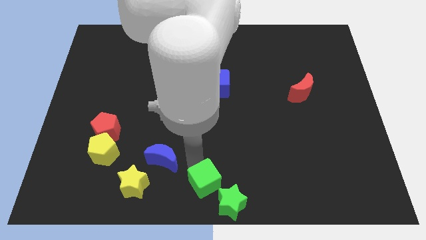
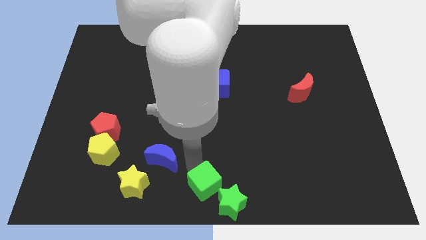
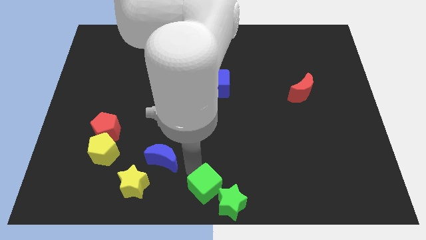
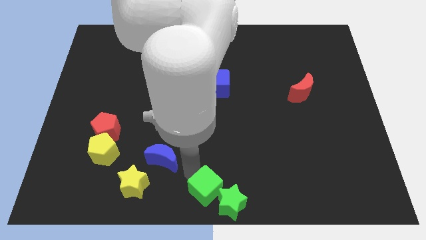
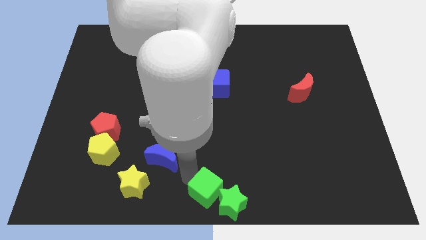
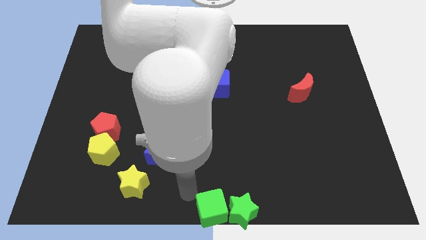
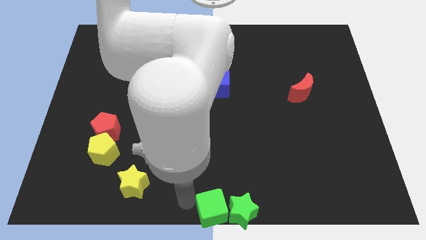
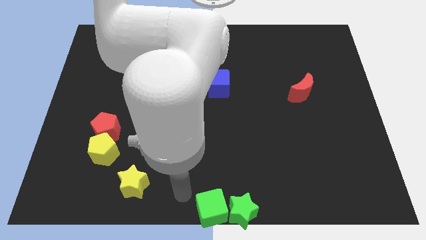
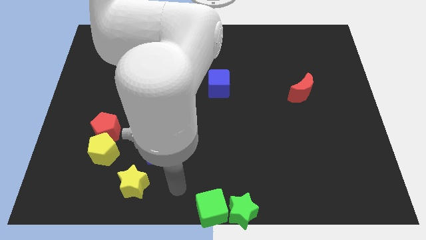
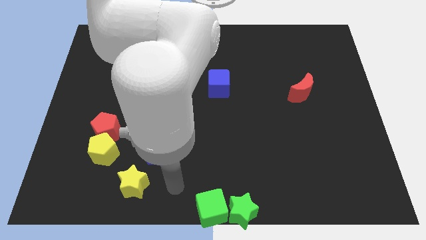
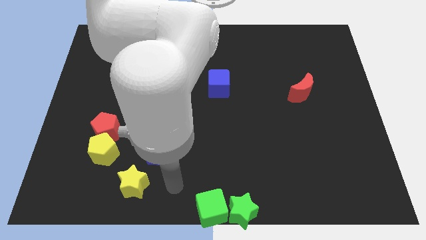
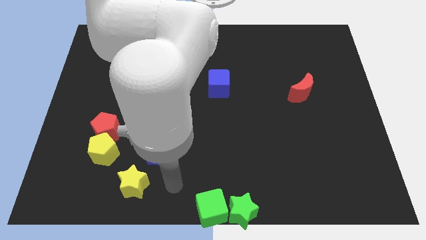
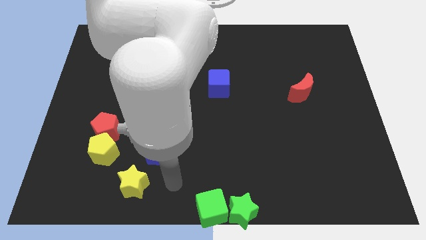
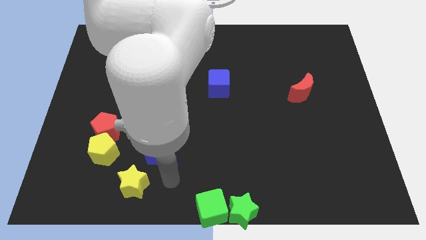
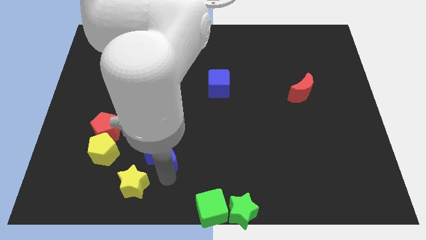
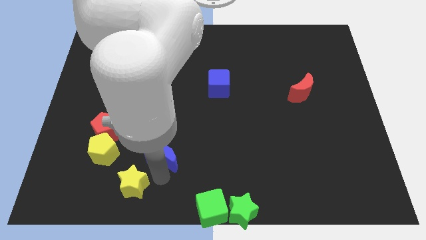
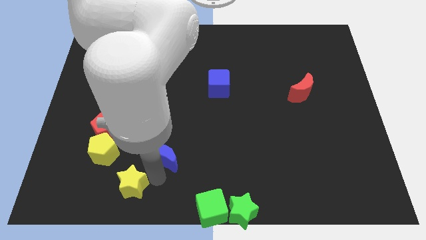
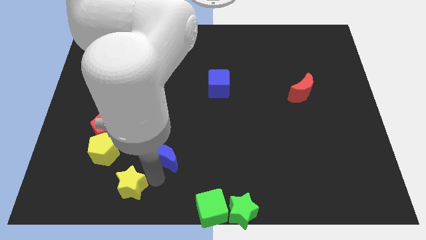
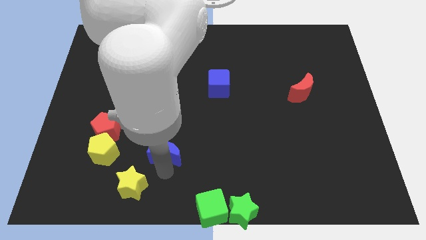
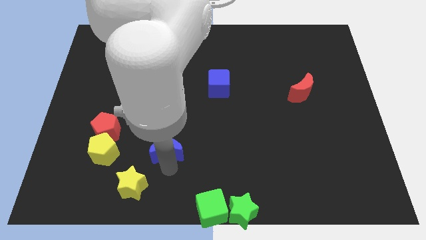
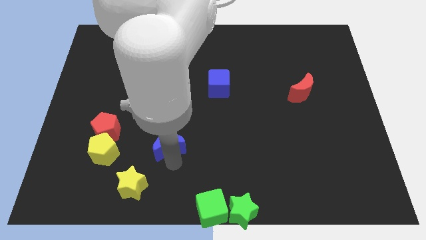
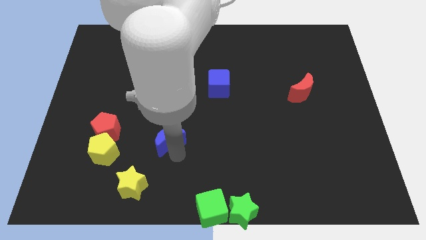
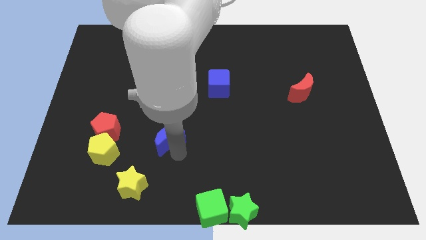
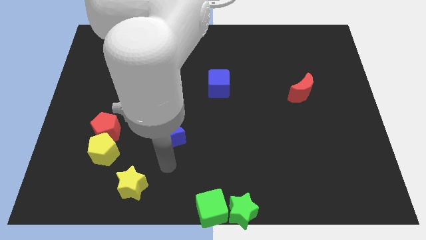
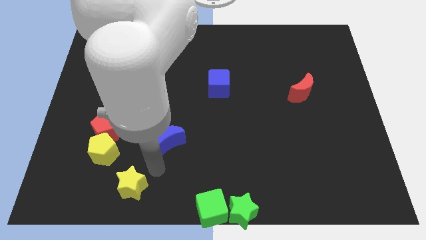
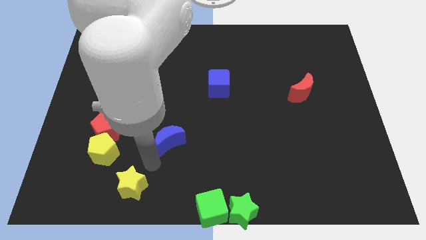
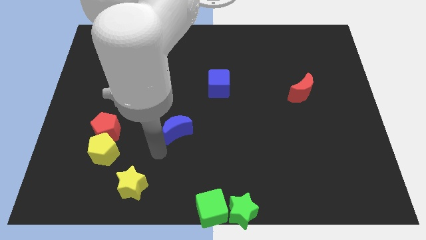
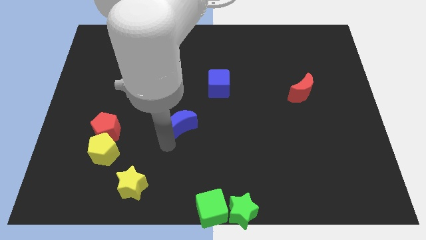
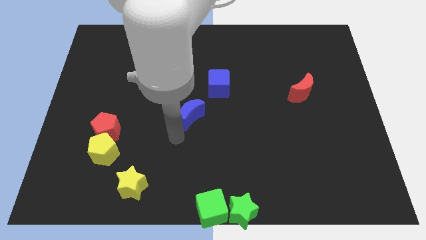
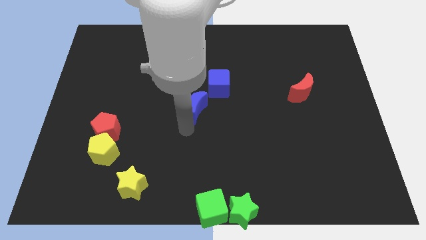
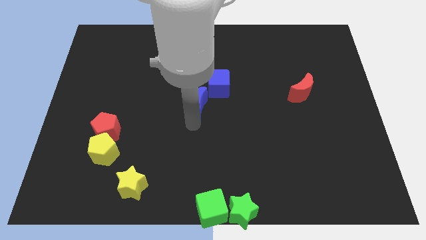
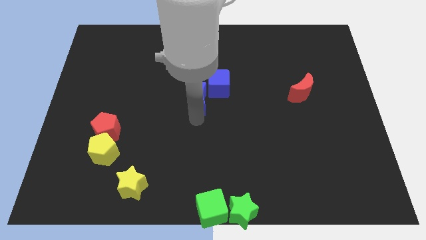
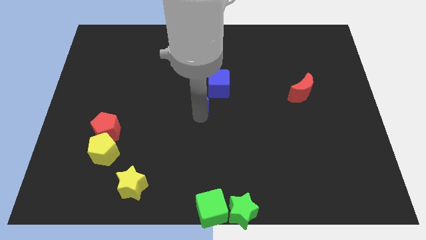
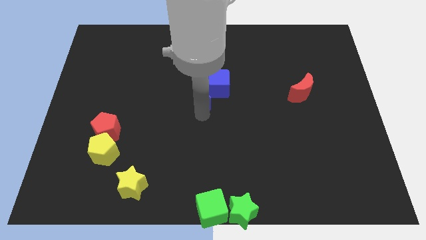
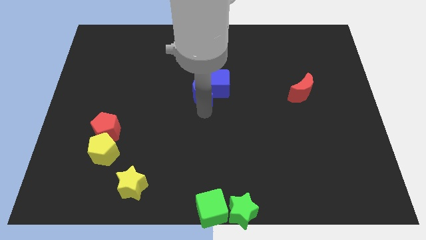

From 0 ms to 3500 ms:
push blue crescent towards blue cube

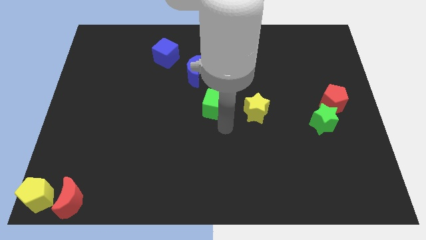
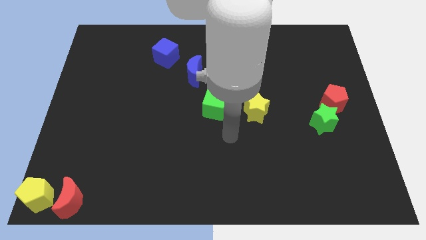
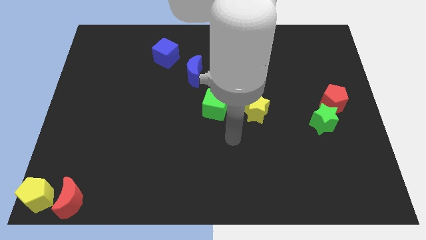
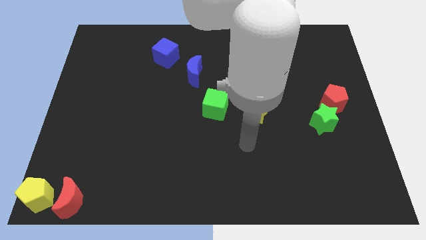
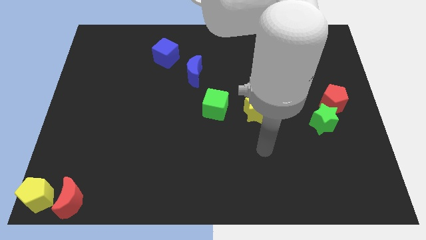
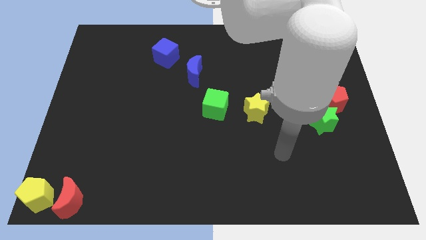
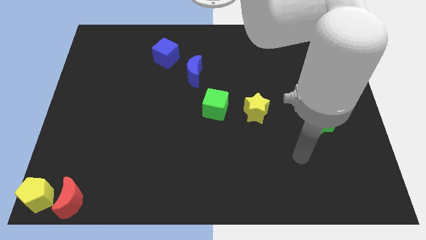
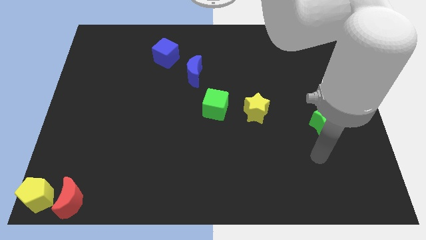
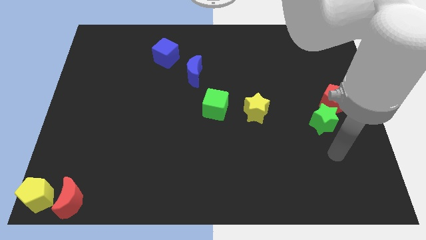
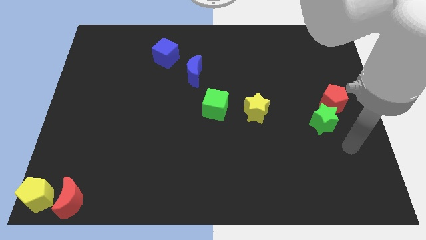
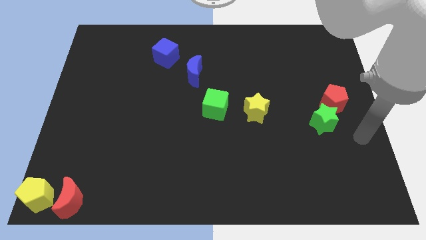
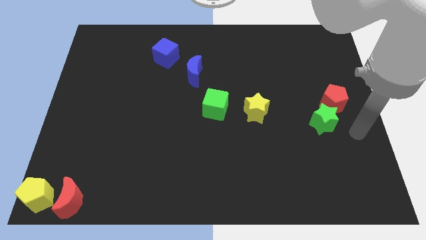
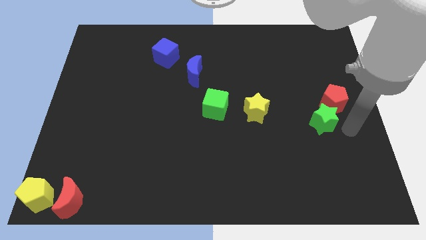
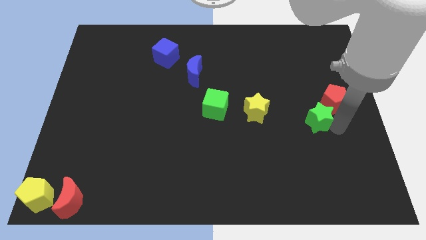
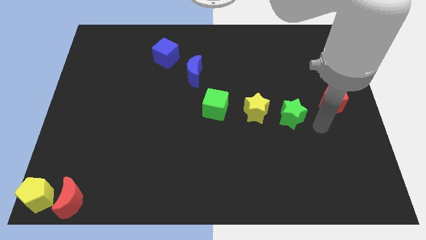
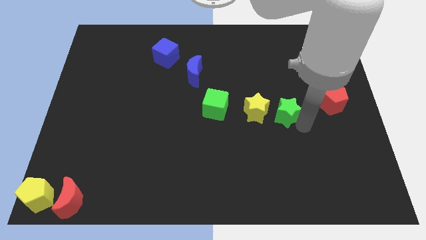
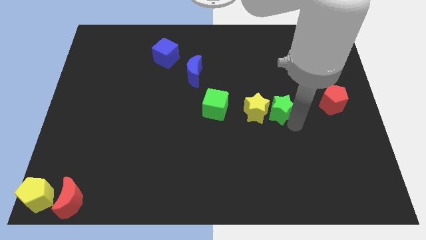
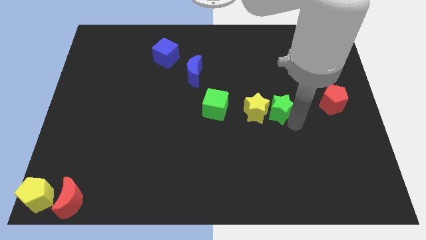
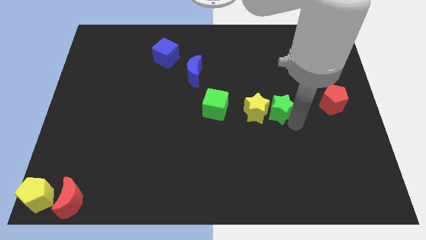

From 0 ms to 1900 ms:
put the green star right to the yellow star

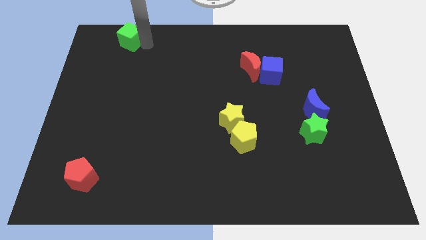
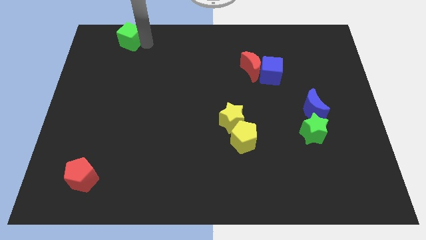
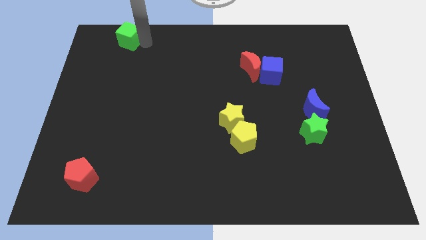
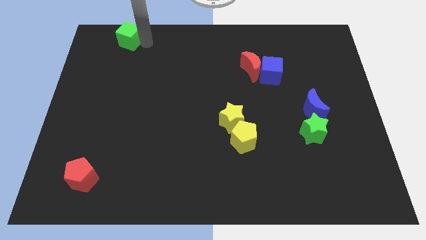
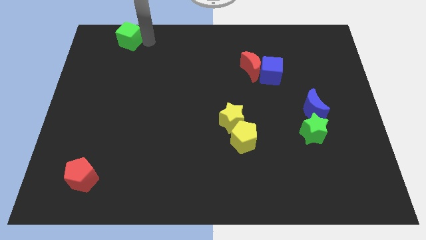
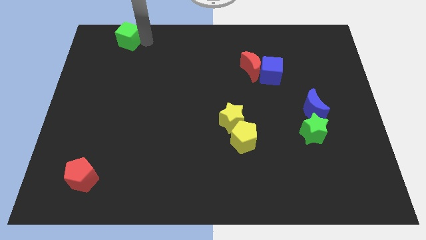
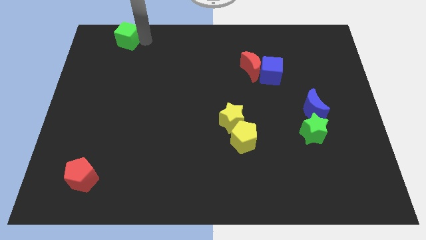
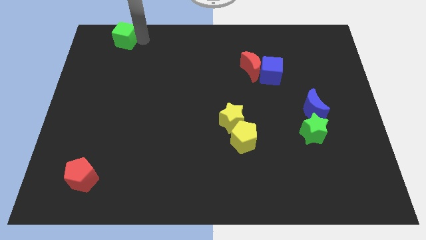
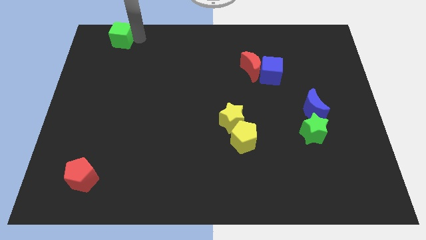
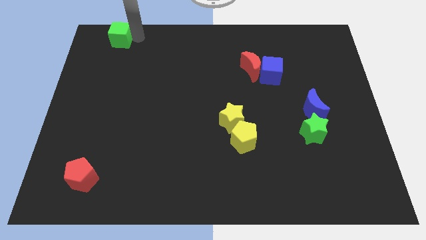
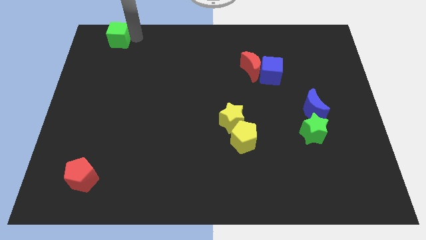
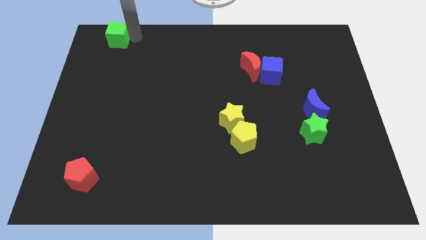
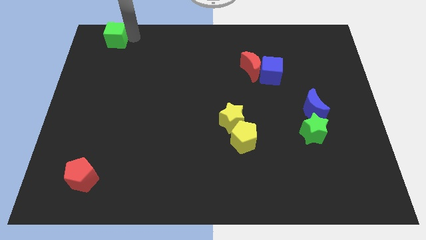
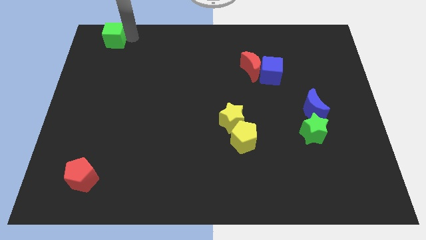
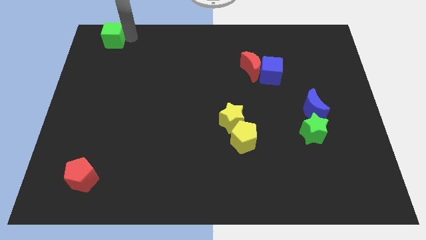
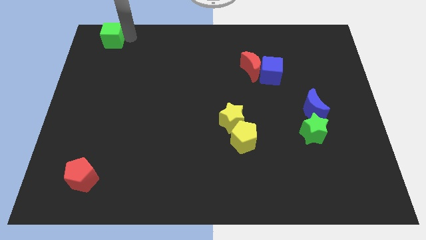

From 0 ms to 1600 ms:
put green cube vertically above red pentagon

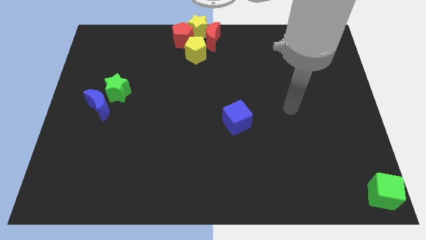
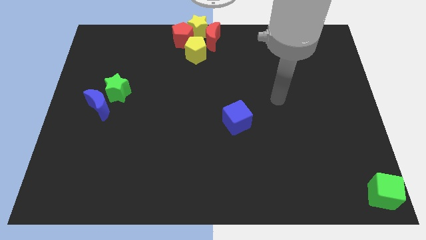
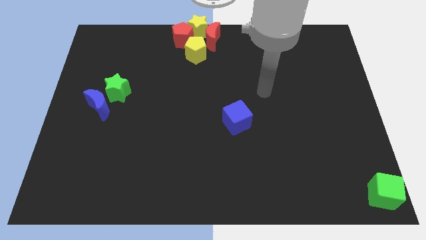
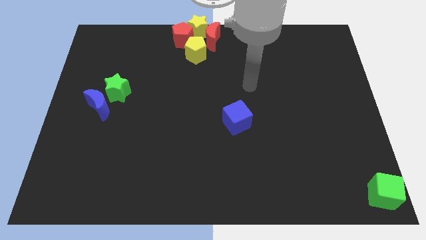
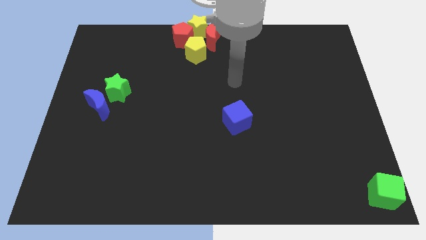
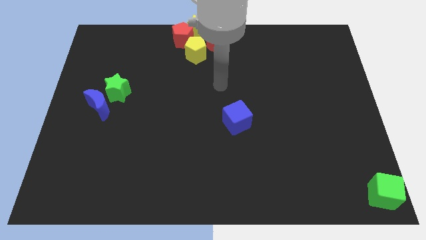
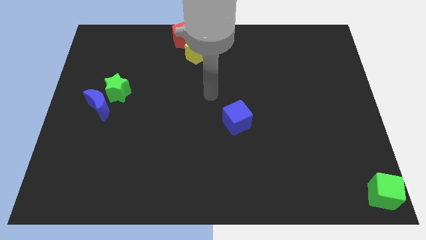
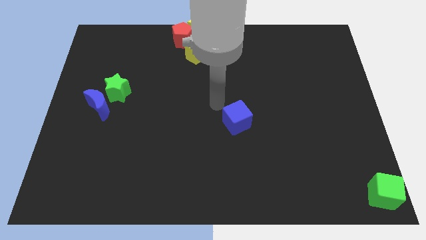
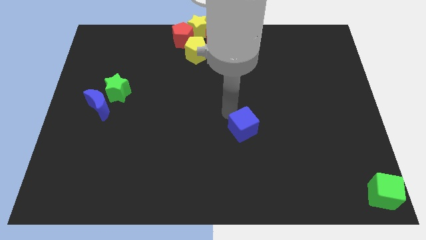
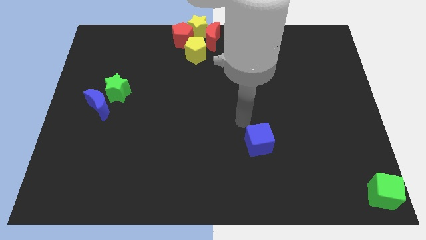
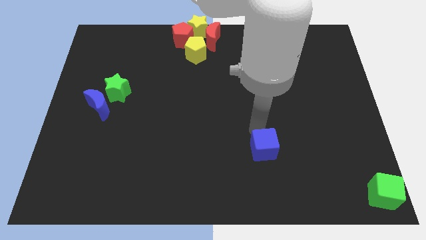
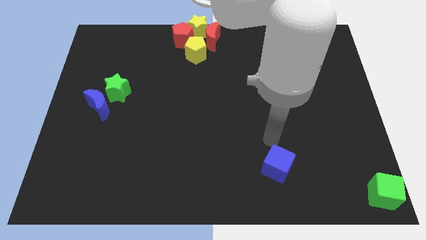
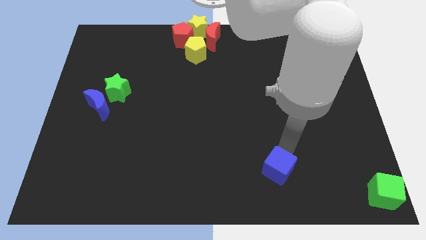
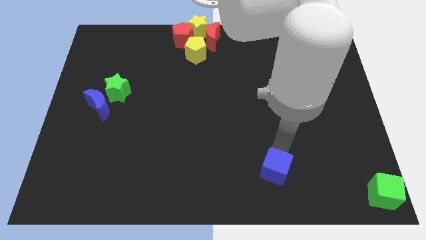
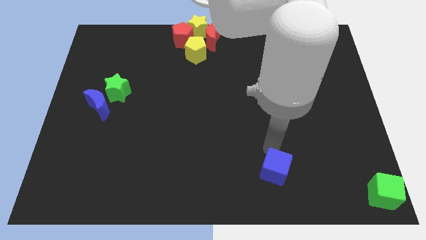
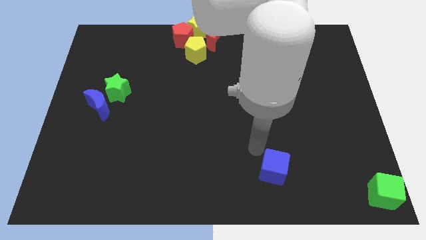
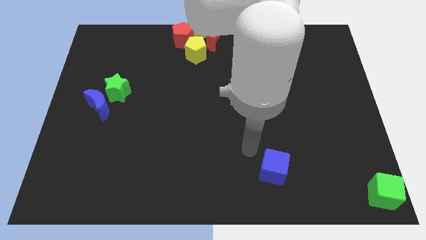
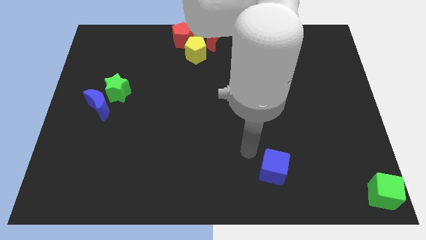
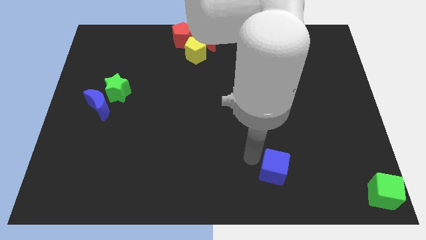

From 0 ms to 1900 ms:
move the blue cube diagonally towards the green cube
